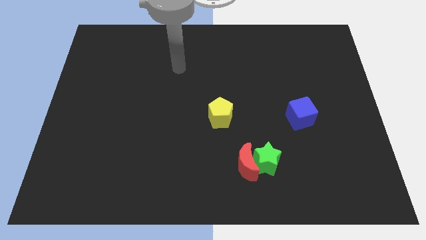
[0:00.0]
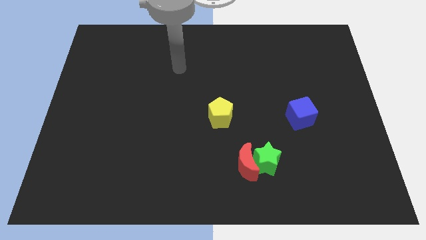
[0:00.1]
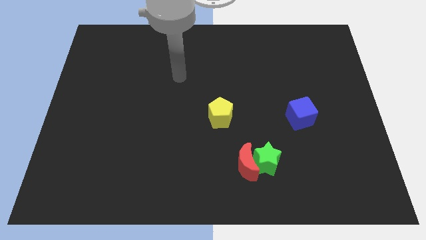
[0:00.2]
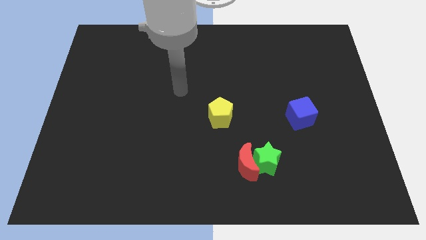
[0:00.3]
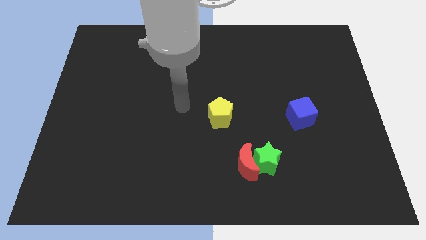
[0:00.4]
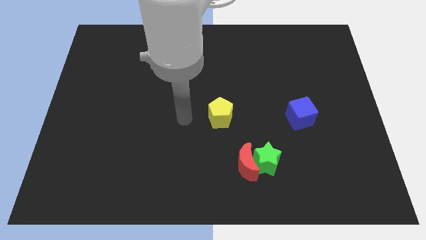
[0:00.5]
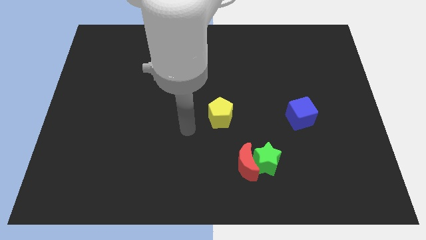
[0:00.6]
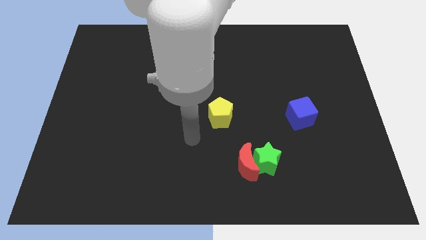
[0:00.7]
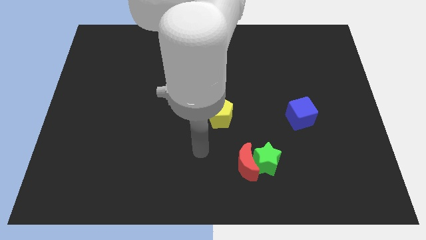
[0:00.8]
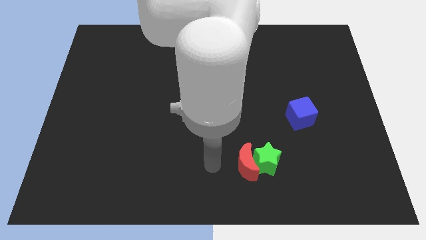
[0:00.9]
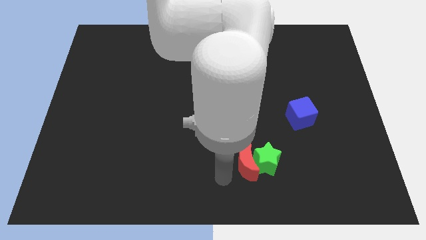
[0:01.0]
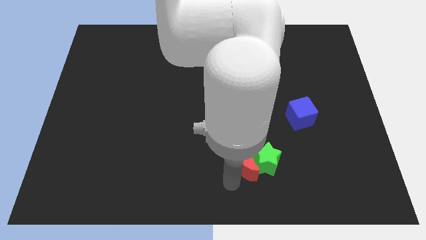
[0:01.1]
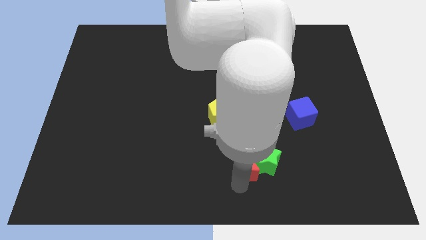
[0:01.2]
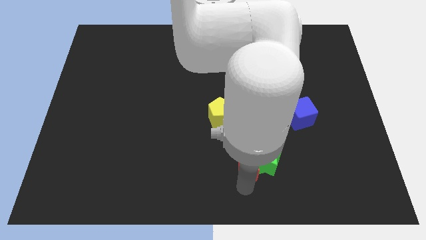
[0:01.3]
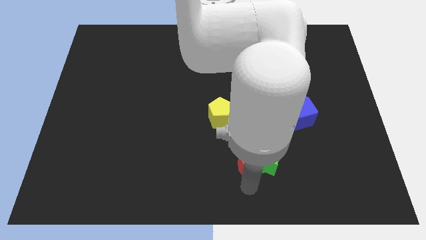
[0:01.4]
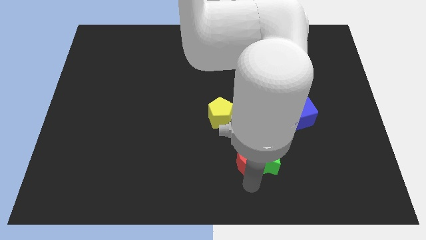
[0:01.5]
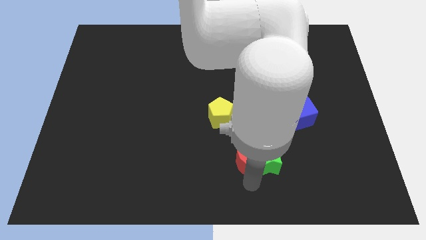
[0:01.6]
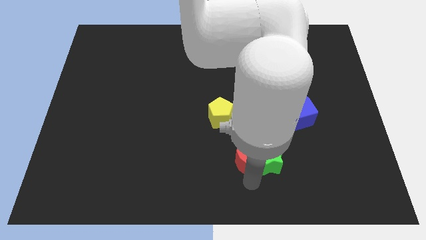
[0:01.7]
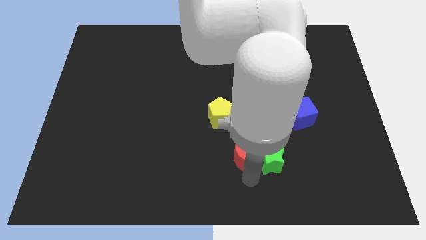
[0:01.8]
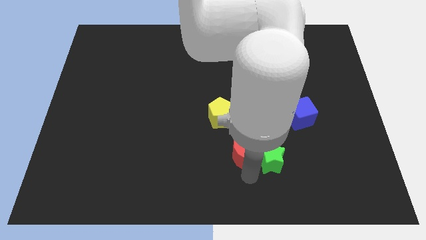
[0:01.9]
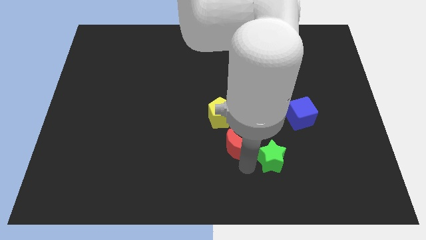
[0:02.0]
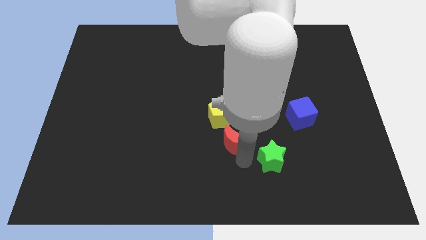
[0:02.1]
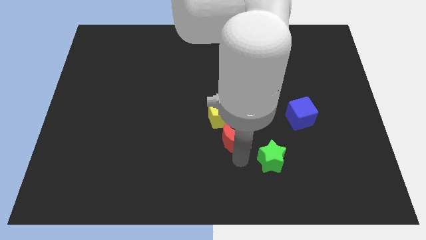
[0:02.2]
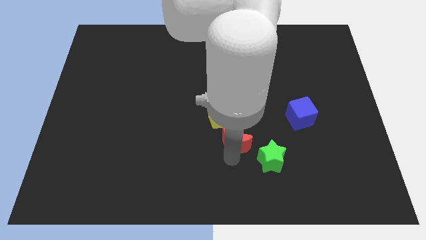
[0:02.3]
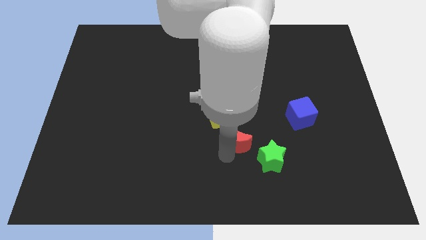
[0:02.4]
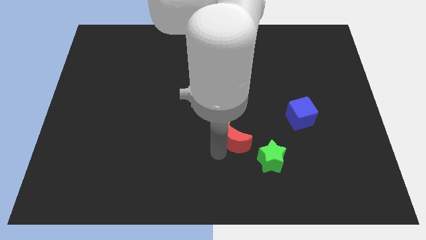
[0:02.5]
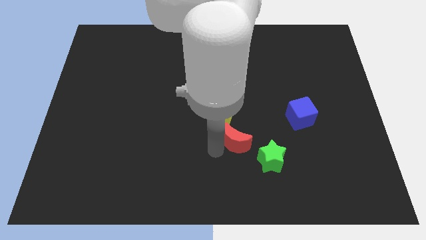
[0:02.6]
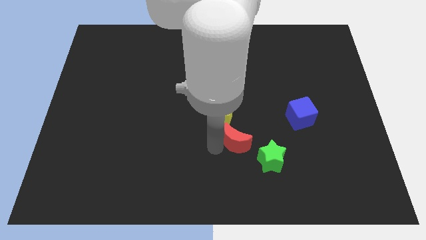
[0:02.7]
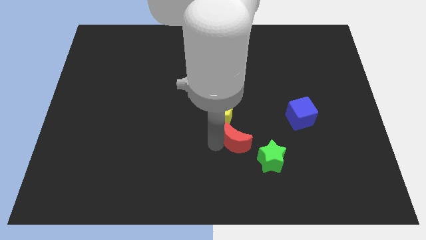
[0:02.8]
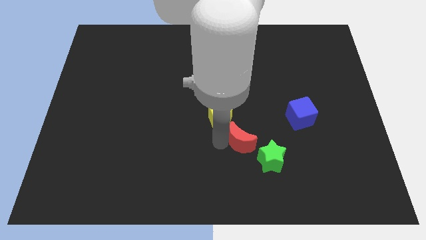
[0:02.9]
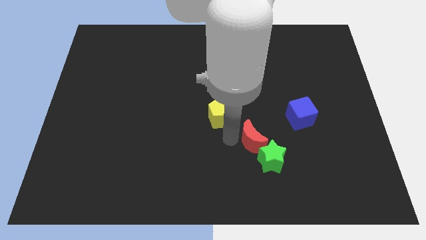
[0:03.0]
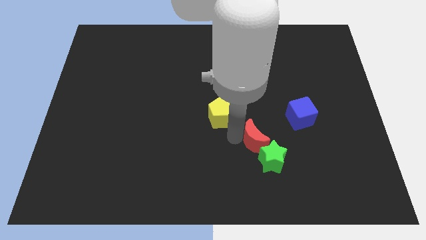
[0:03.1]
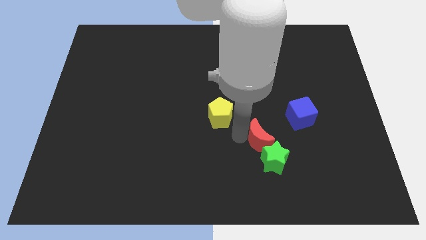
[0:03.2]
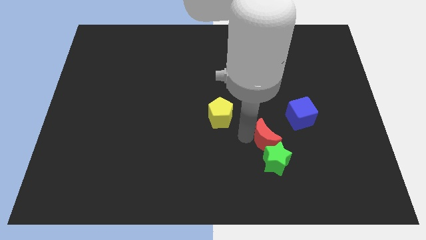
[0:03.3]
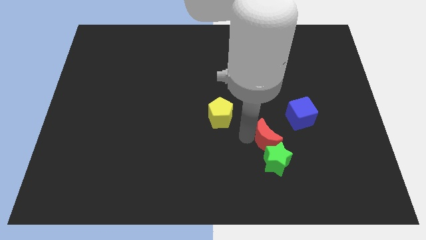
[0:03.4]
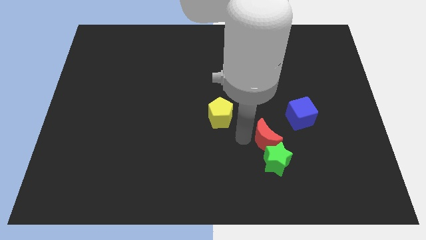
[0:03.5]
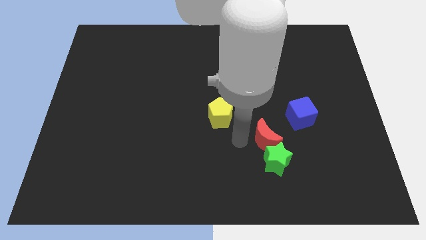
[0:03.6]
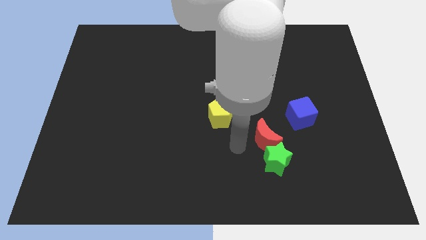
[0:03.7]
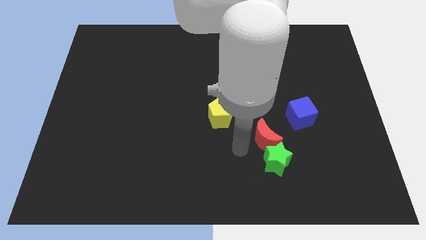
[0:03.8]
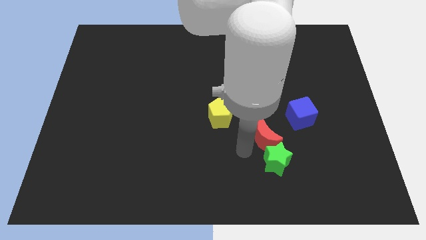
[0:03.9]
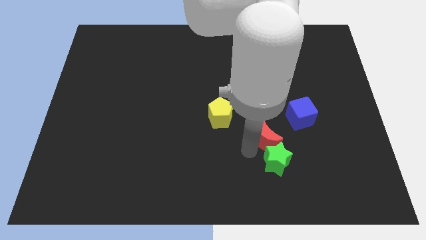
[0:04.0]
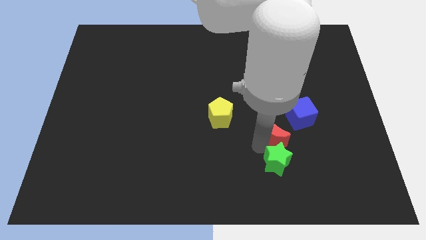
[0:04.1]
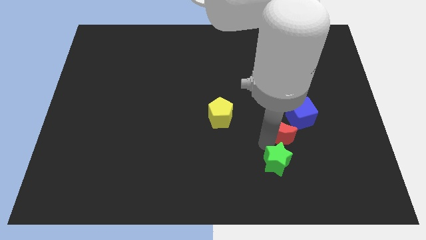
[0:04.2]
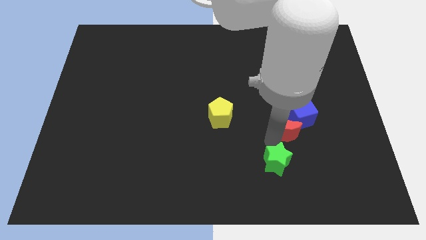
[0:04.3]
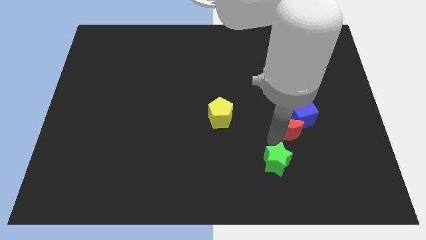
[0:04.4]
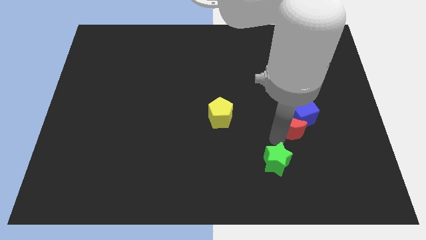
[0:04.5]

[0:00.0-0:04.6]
slide the red block to the blue block

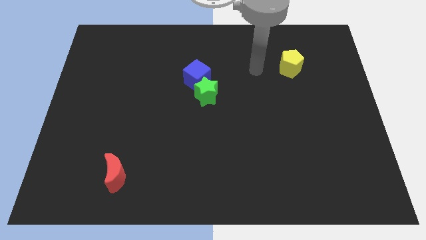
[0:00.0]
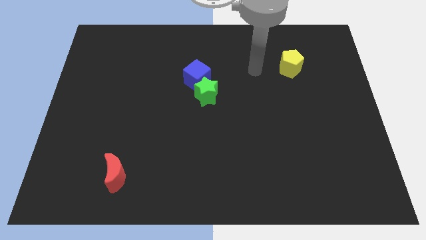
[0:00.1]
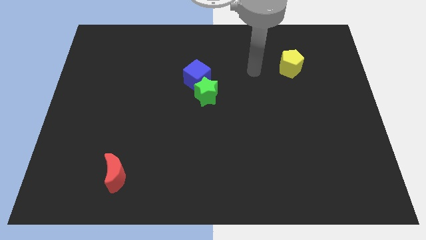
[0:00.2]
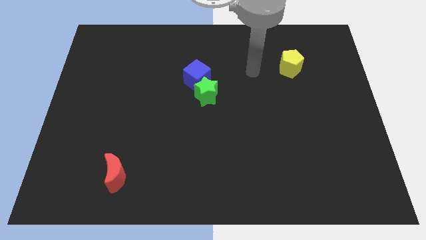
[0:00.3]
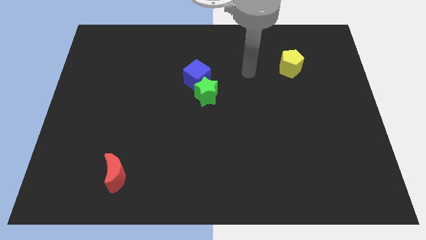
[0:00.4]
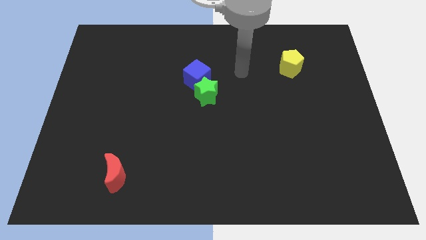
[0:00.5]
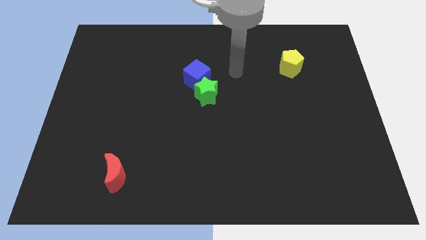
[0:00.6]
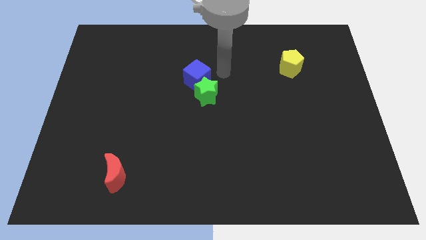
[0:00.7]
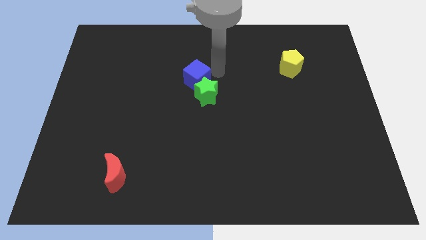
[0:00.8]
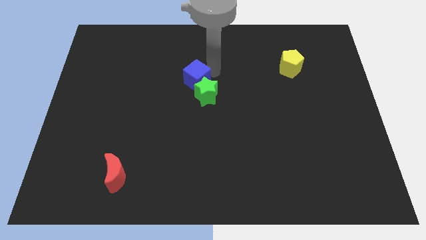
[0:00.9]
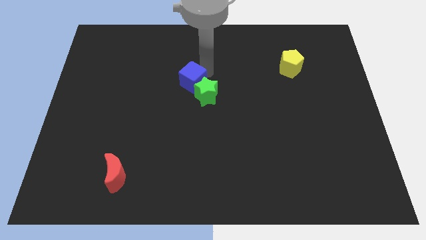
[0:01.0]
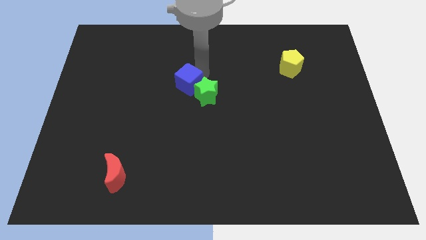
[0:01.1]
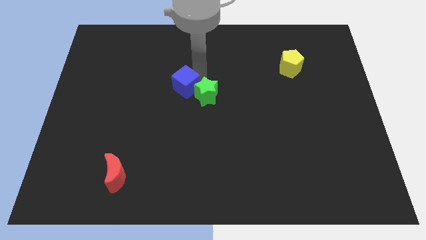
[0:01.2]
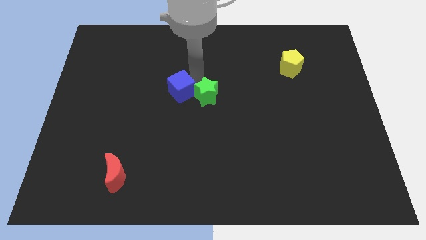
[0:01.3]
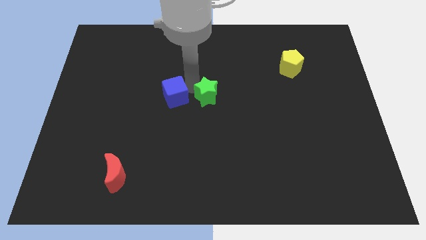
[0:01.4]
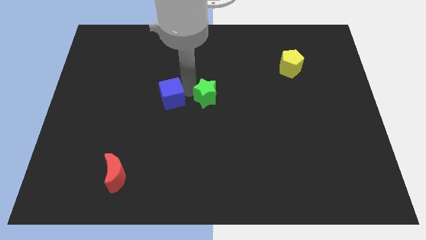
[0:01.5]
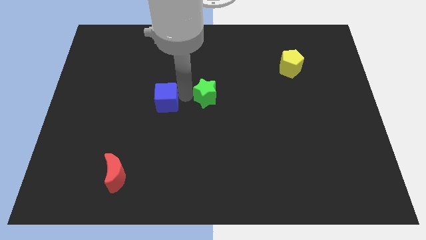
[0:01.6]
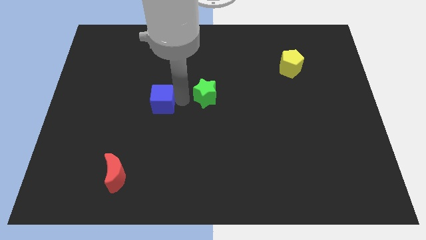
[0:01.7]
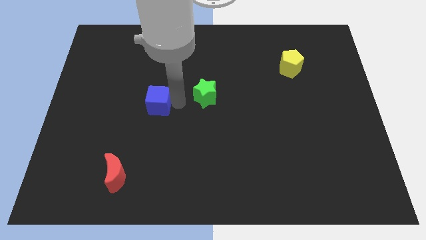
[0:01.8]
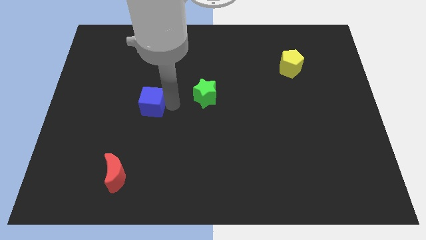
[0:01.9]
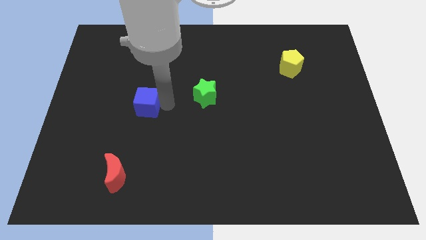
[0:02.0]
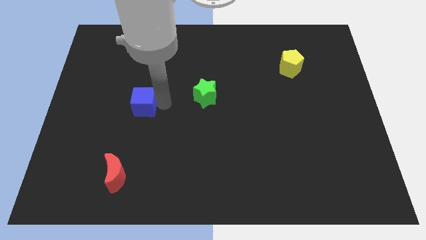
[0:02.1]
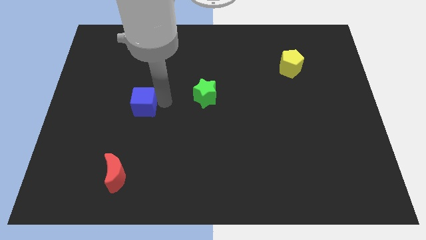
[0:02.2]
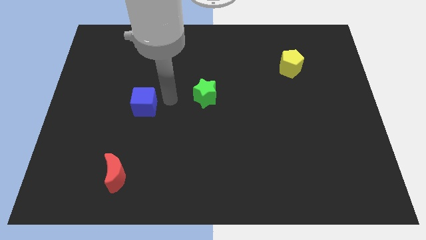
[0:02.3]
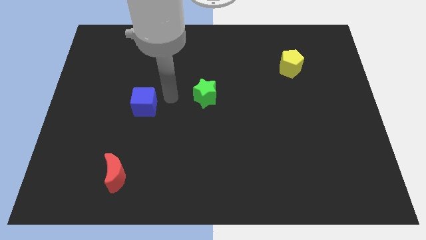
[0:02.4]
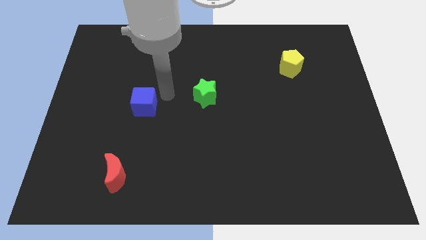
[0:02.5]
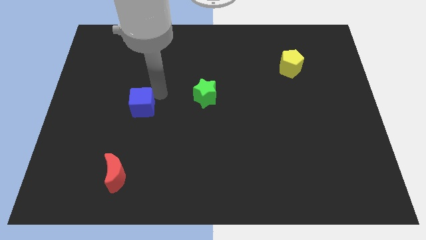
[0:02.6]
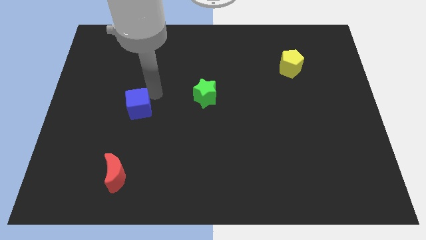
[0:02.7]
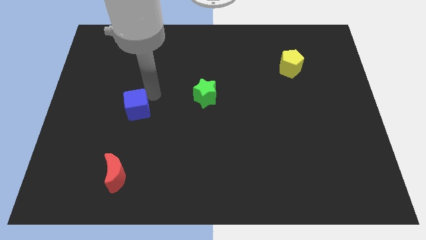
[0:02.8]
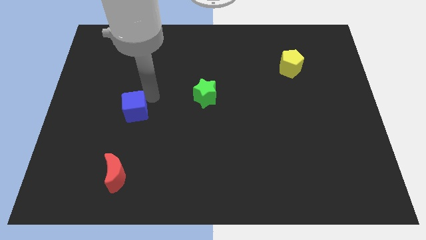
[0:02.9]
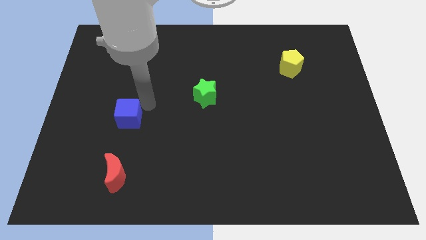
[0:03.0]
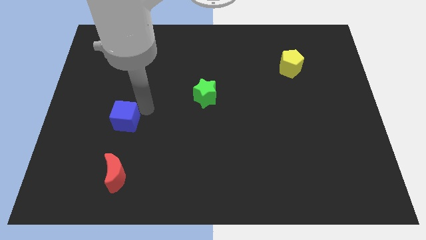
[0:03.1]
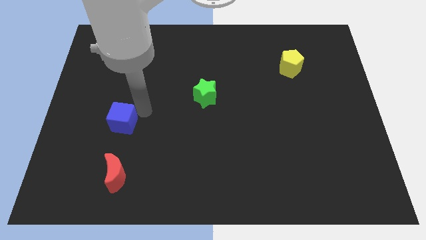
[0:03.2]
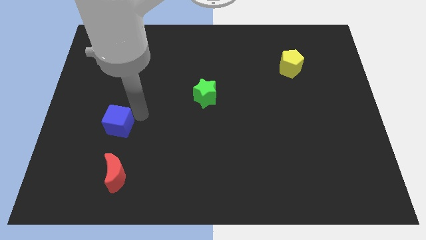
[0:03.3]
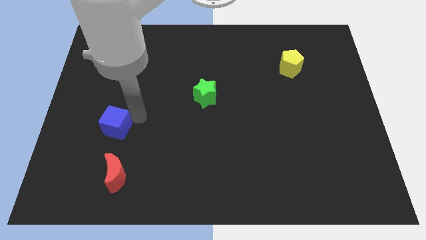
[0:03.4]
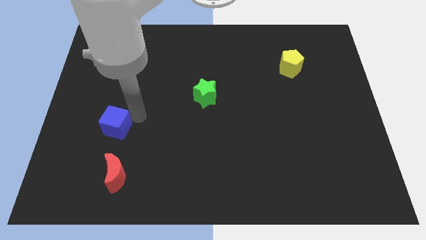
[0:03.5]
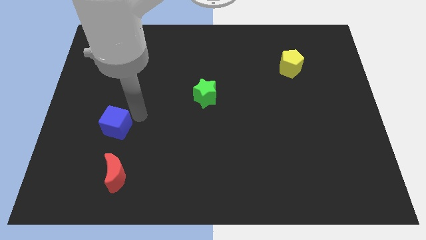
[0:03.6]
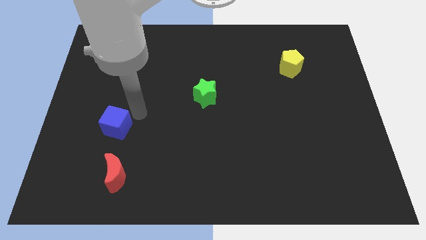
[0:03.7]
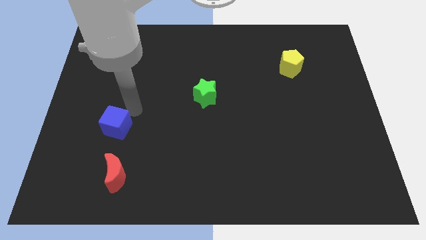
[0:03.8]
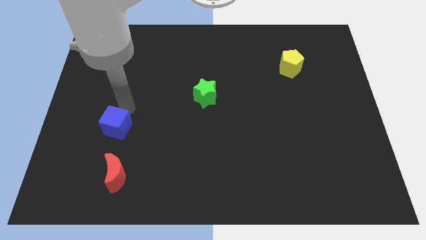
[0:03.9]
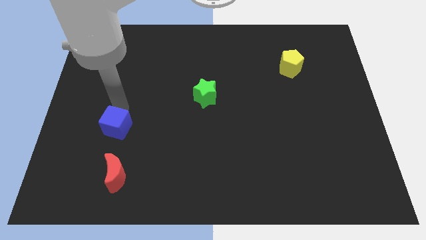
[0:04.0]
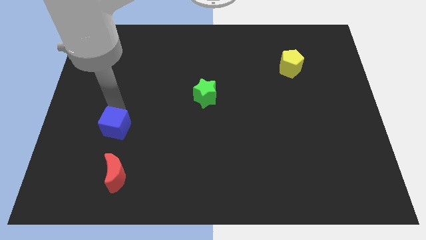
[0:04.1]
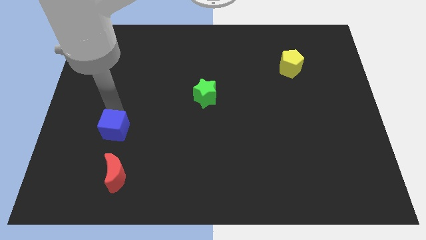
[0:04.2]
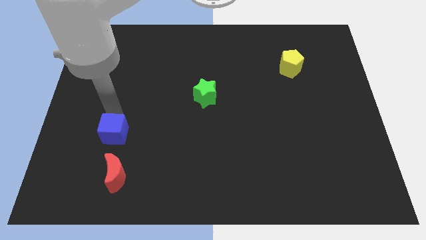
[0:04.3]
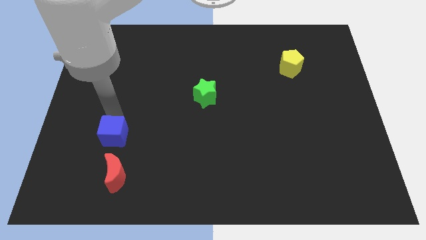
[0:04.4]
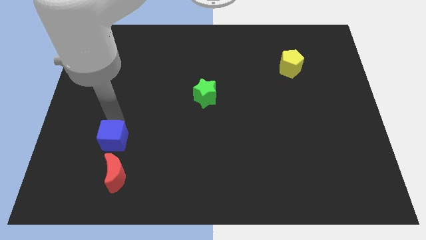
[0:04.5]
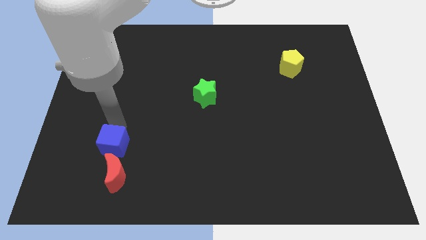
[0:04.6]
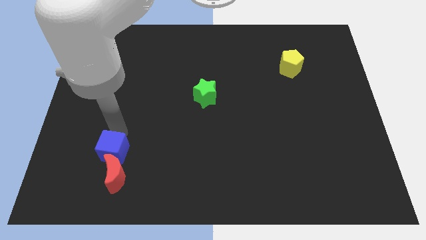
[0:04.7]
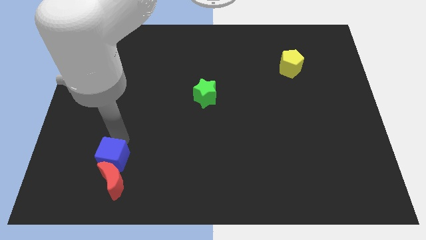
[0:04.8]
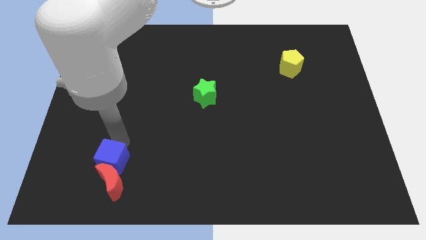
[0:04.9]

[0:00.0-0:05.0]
move the cube towards the red block
